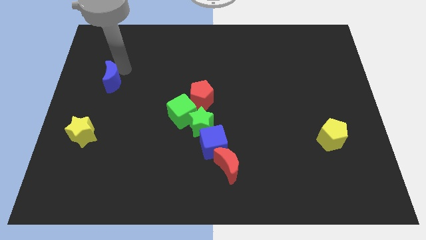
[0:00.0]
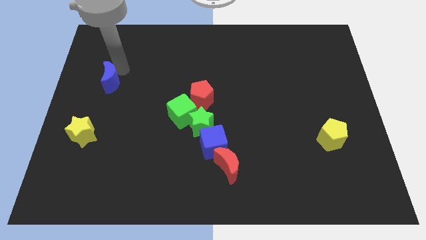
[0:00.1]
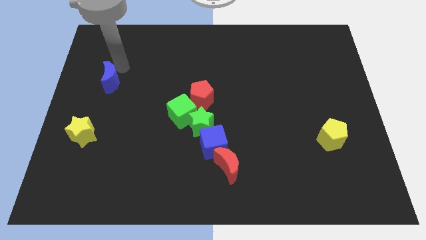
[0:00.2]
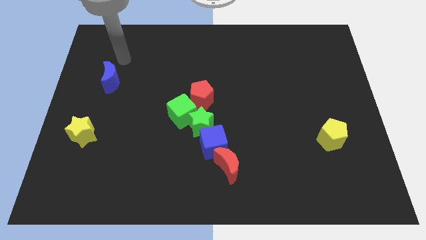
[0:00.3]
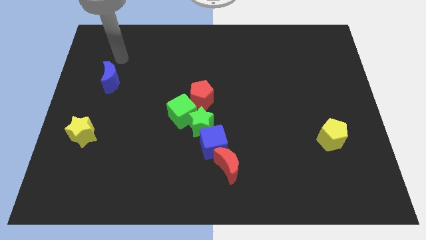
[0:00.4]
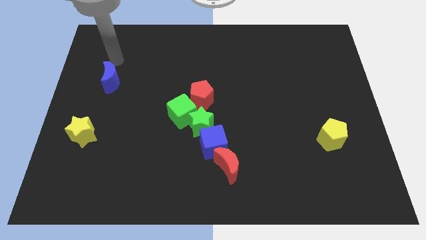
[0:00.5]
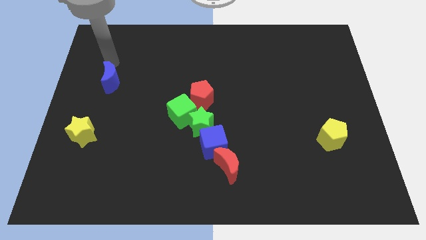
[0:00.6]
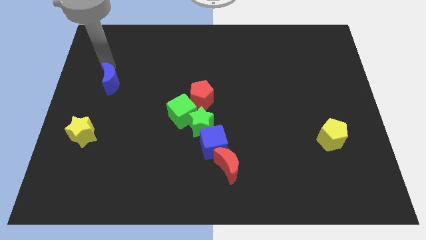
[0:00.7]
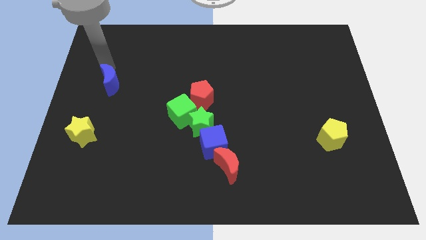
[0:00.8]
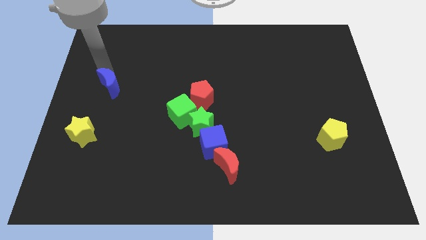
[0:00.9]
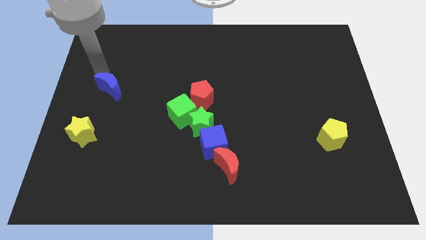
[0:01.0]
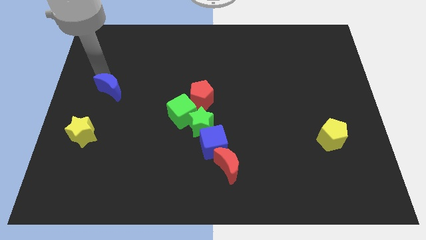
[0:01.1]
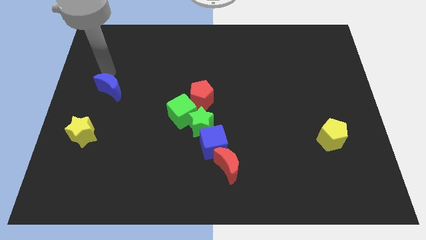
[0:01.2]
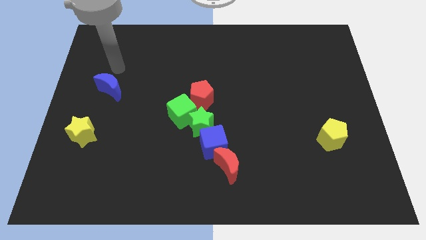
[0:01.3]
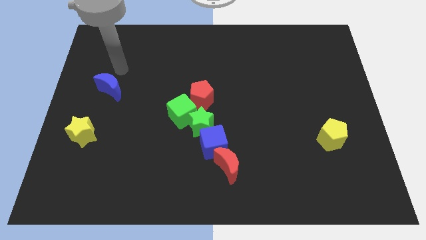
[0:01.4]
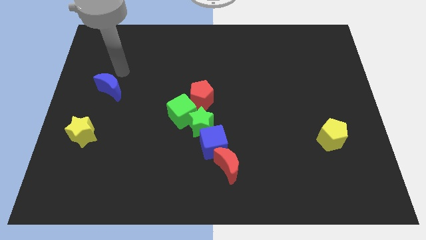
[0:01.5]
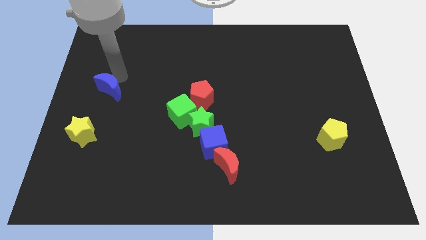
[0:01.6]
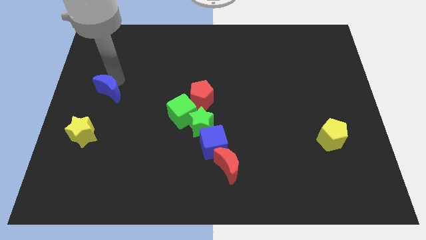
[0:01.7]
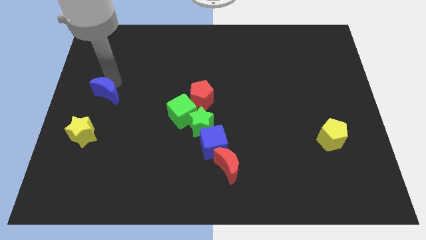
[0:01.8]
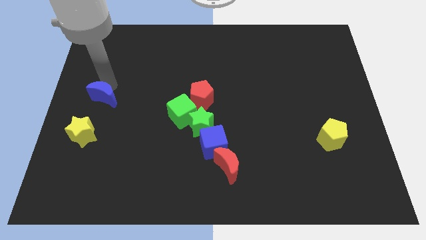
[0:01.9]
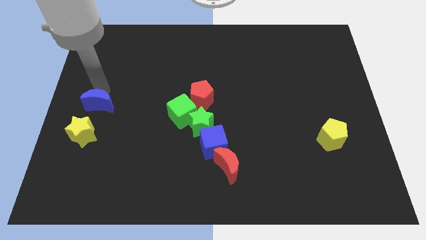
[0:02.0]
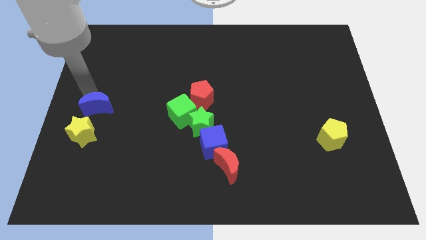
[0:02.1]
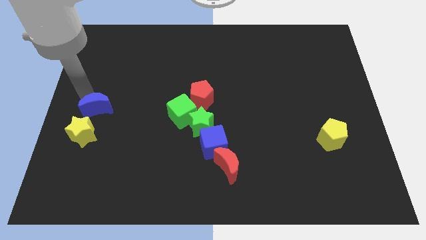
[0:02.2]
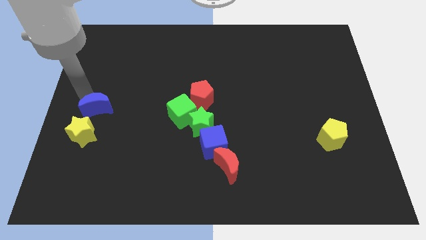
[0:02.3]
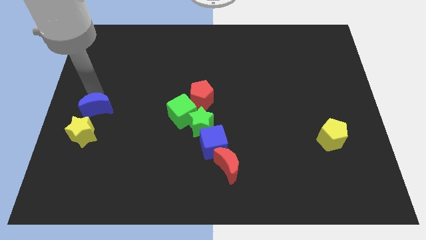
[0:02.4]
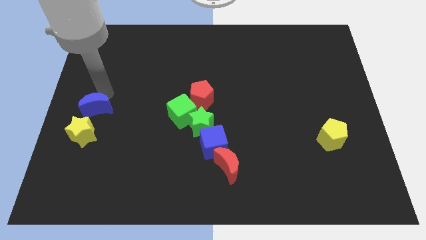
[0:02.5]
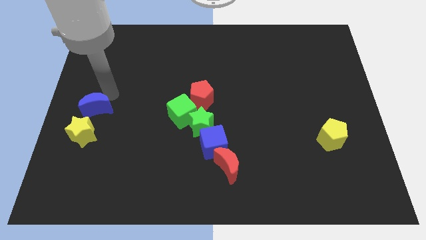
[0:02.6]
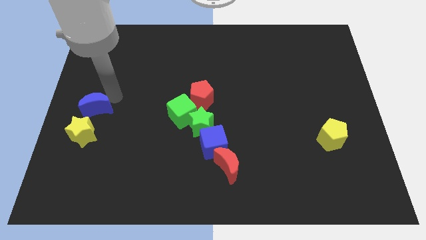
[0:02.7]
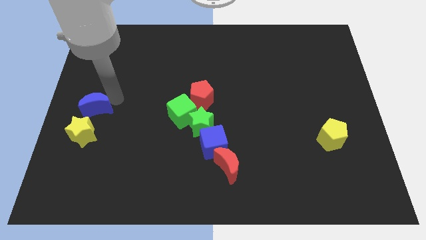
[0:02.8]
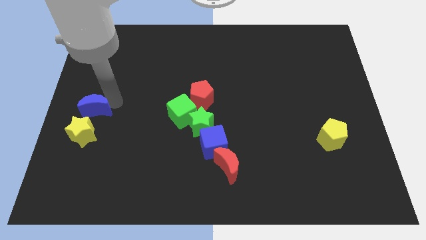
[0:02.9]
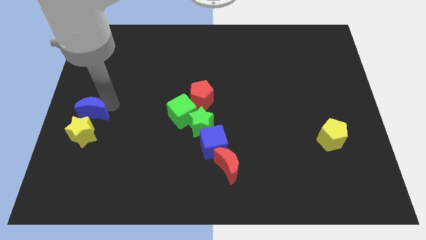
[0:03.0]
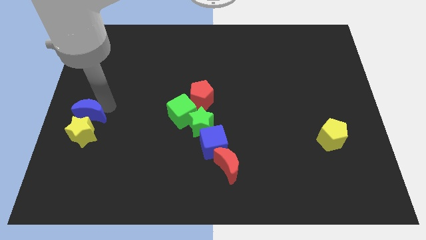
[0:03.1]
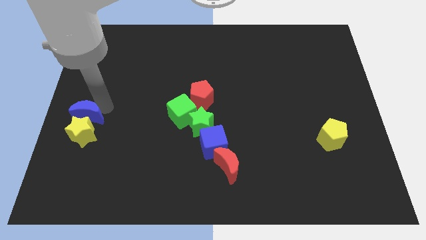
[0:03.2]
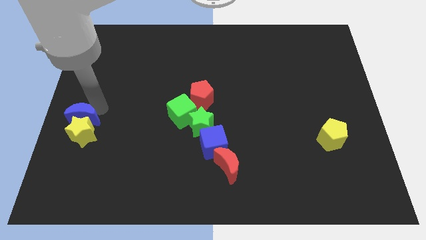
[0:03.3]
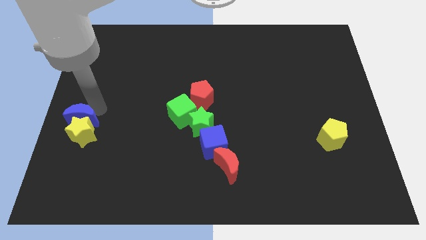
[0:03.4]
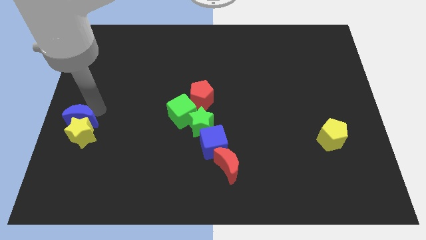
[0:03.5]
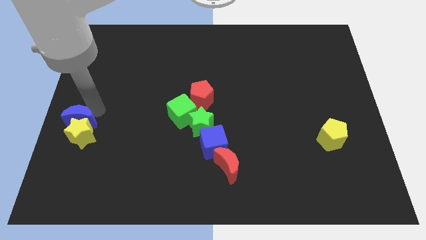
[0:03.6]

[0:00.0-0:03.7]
place the blue moon to the top side of the yellow star

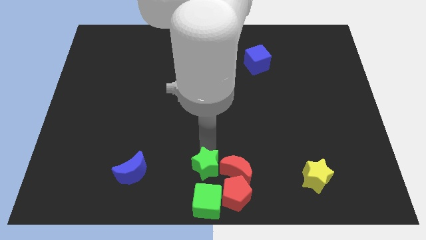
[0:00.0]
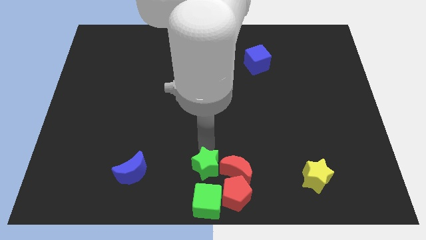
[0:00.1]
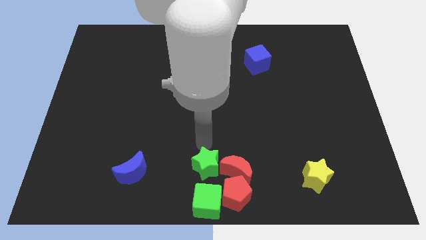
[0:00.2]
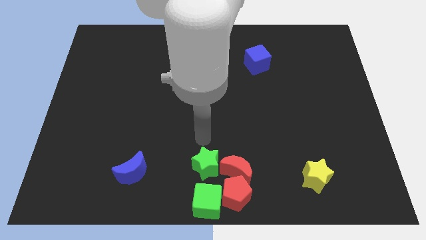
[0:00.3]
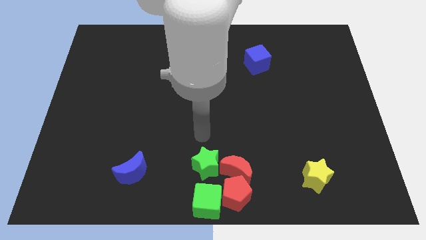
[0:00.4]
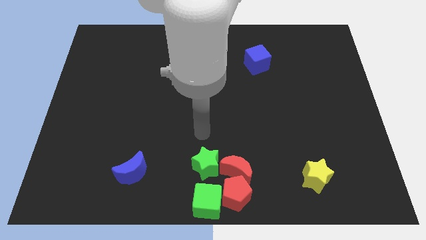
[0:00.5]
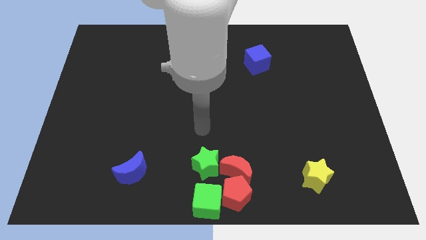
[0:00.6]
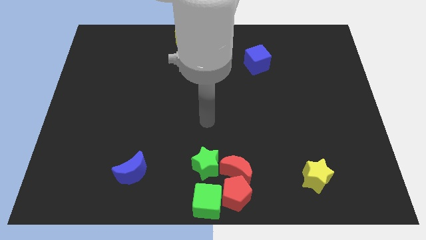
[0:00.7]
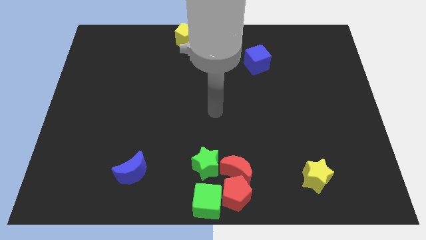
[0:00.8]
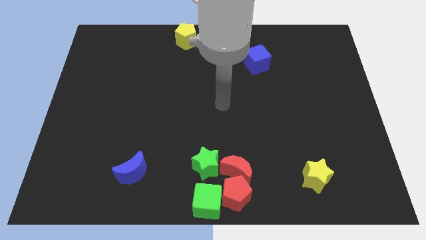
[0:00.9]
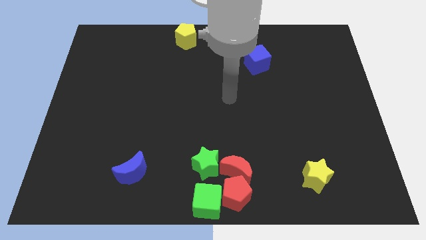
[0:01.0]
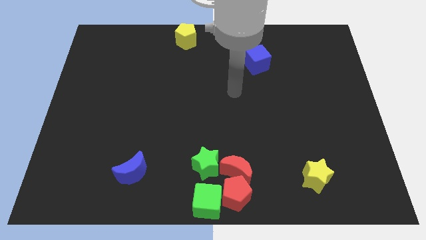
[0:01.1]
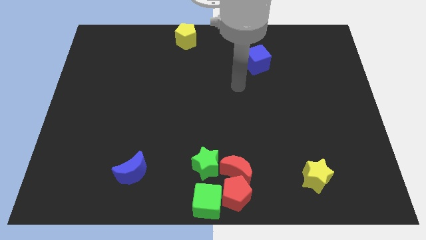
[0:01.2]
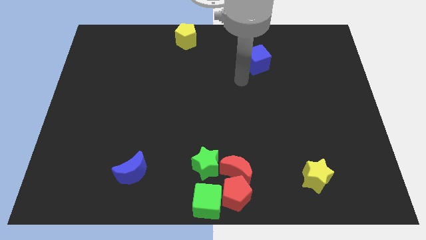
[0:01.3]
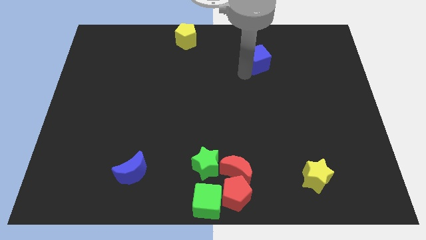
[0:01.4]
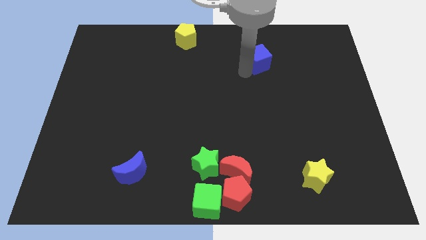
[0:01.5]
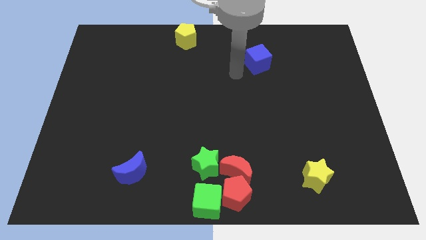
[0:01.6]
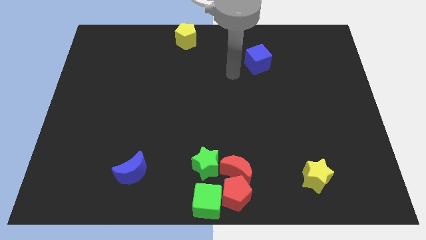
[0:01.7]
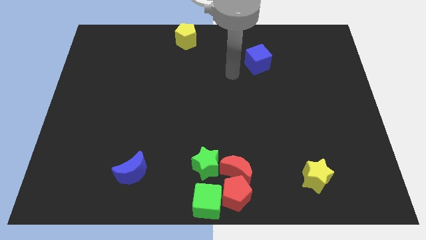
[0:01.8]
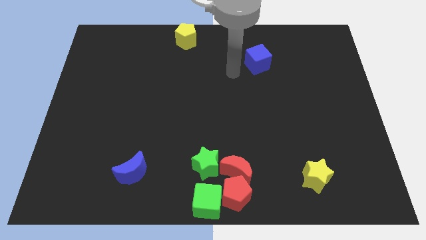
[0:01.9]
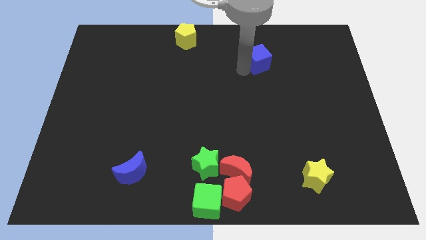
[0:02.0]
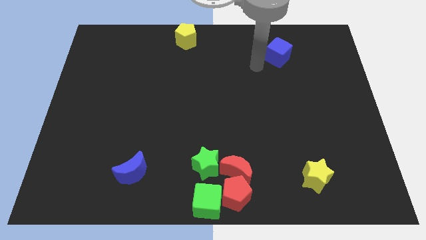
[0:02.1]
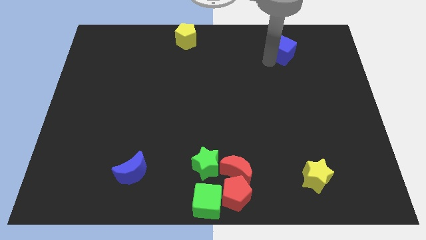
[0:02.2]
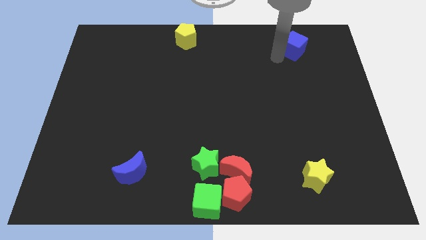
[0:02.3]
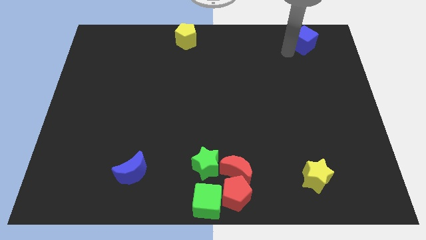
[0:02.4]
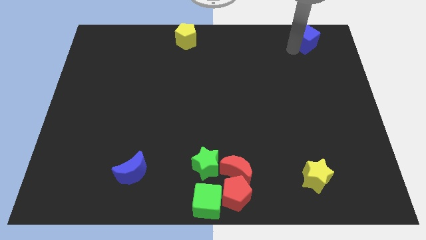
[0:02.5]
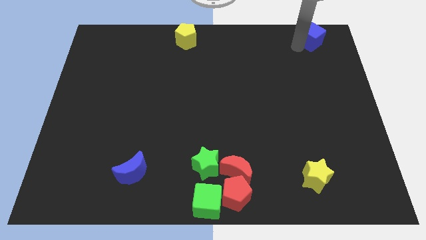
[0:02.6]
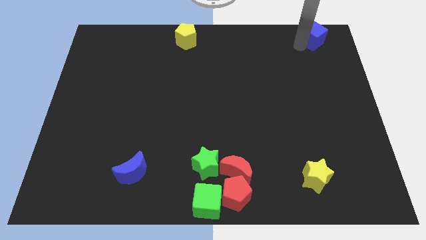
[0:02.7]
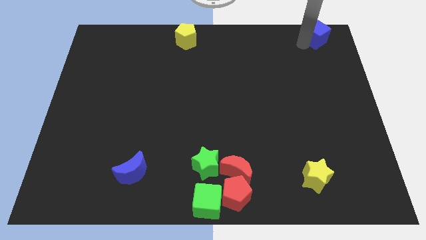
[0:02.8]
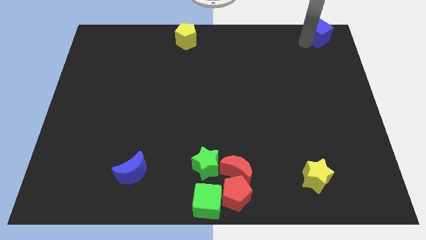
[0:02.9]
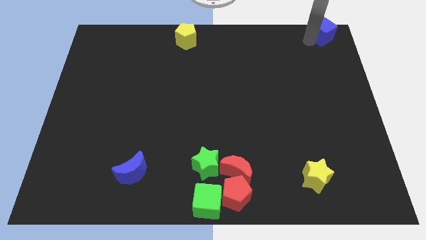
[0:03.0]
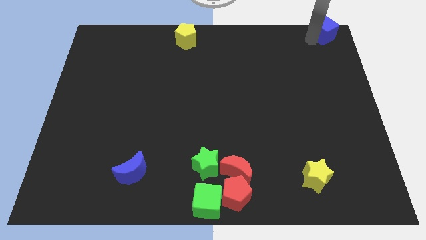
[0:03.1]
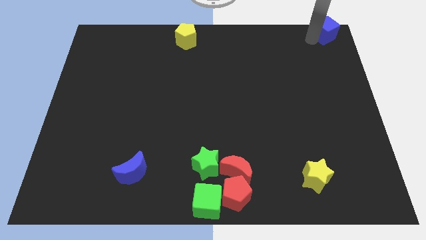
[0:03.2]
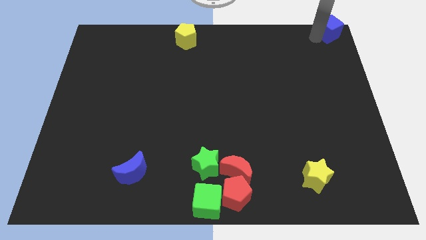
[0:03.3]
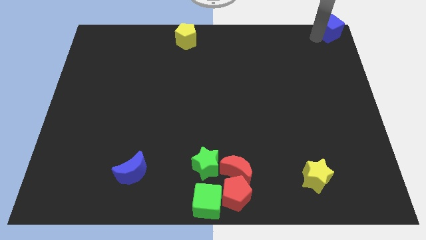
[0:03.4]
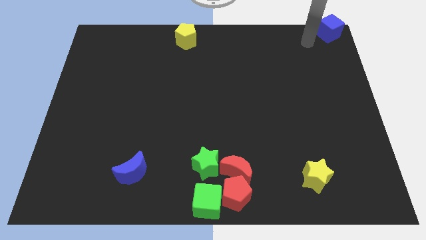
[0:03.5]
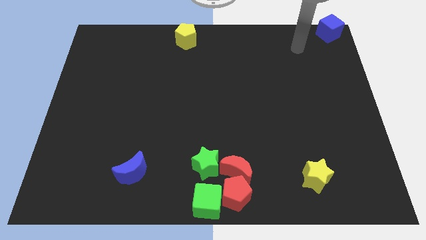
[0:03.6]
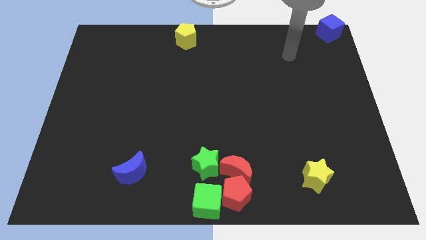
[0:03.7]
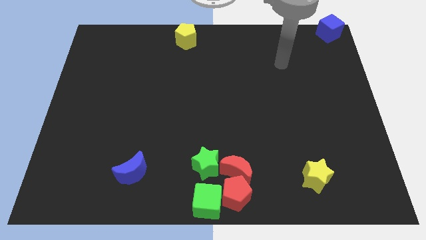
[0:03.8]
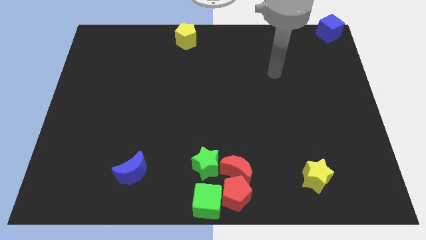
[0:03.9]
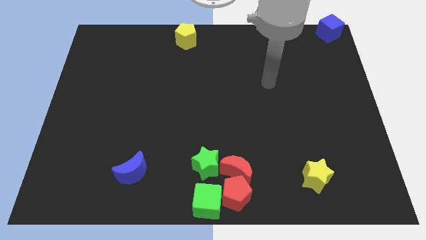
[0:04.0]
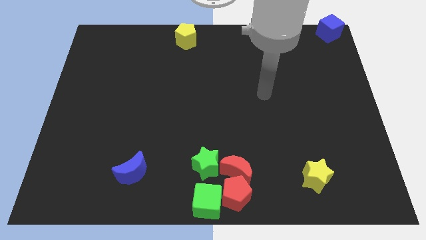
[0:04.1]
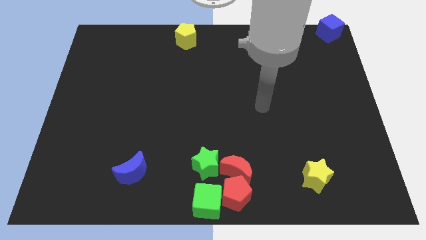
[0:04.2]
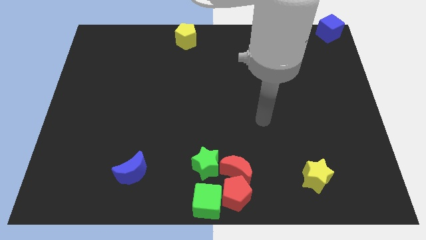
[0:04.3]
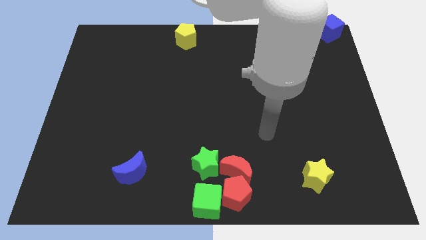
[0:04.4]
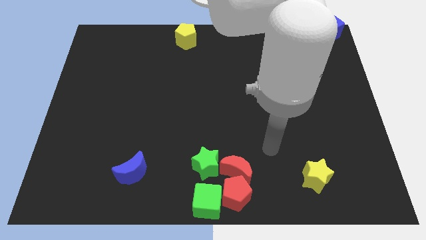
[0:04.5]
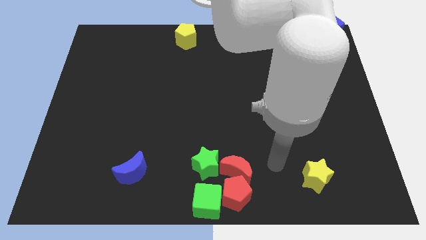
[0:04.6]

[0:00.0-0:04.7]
push the blue cube to the top right corner

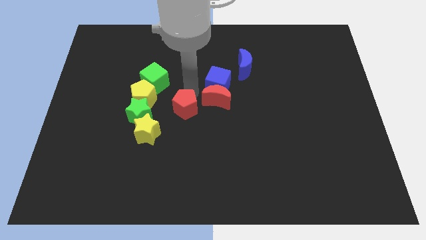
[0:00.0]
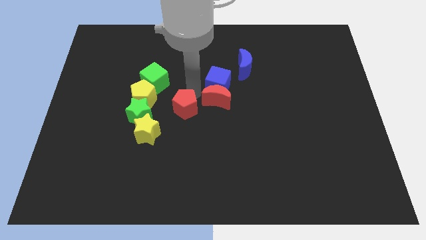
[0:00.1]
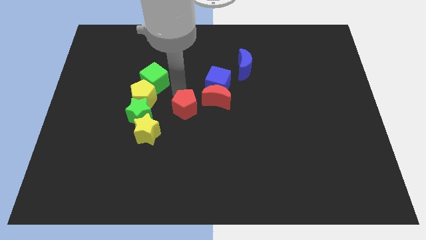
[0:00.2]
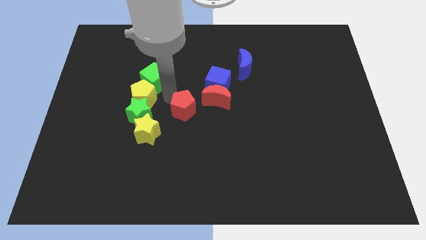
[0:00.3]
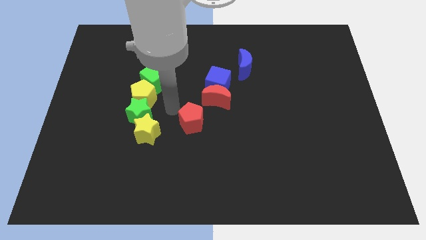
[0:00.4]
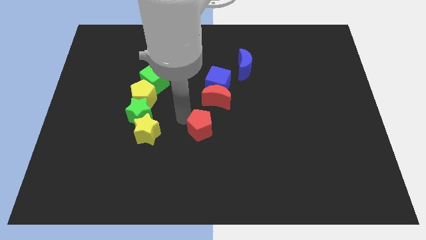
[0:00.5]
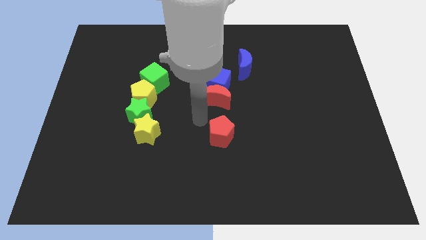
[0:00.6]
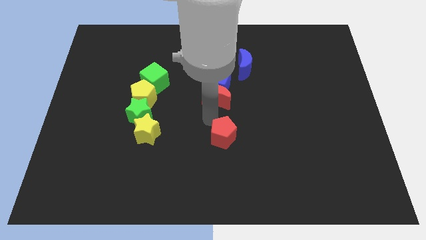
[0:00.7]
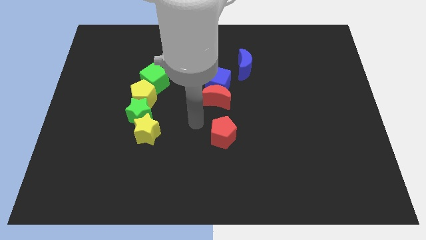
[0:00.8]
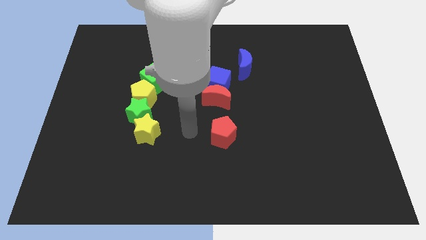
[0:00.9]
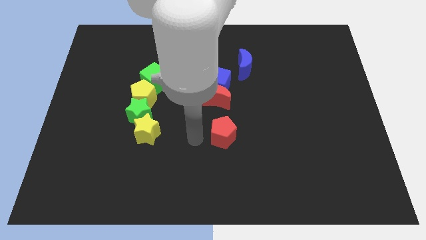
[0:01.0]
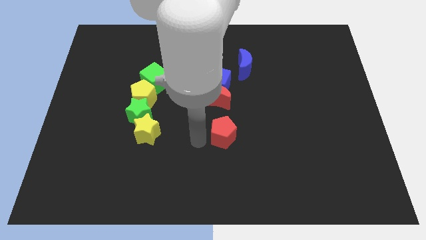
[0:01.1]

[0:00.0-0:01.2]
put the red pentagon underneath the red crescent
